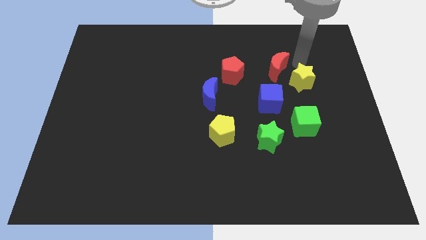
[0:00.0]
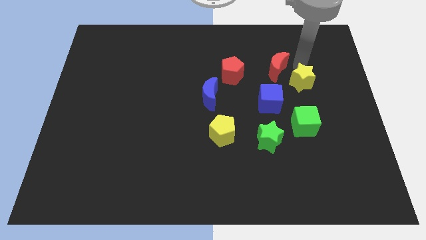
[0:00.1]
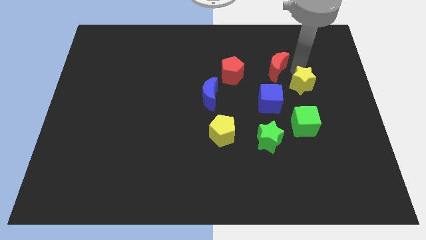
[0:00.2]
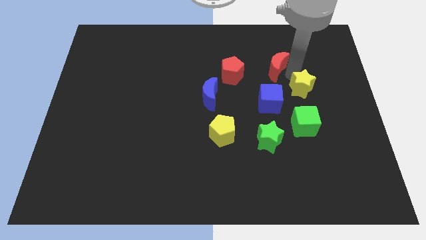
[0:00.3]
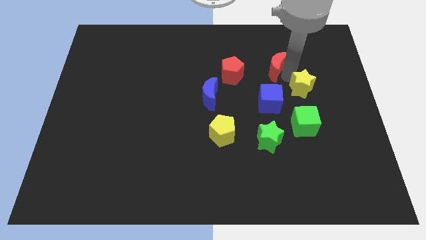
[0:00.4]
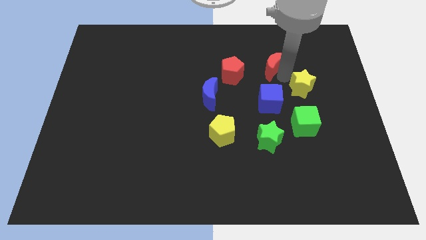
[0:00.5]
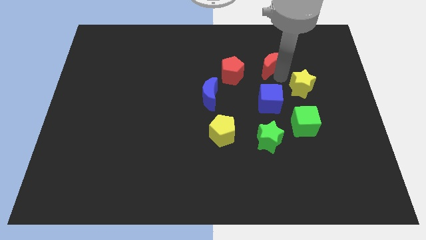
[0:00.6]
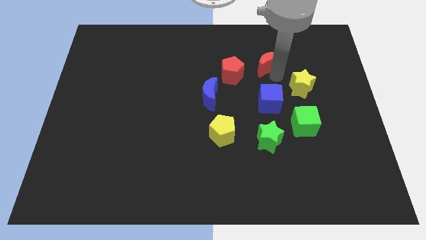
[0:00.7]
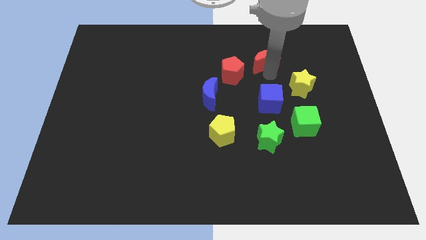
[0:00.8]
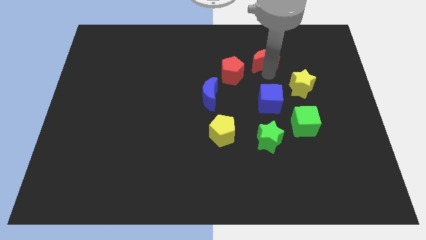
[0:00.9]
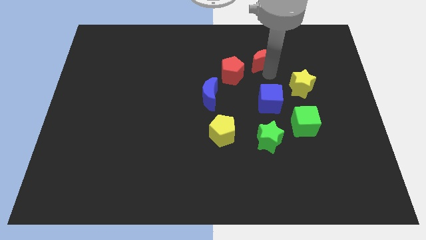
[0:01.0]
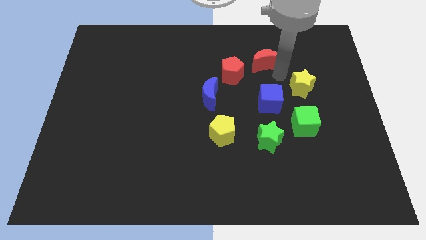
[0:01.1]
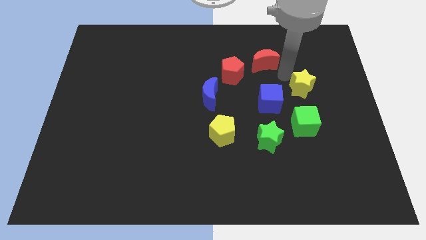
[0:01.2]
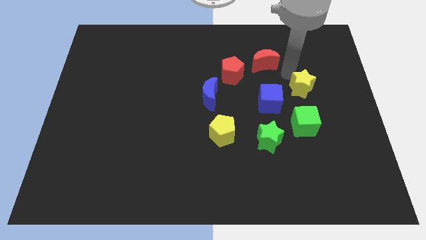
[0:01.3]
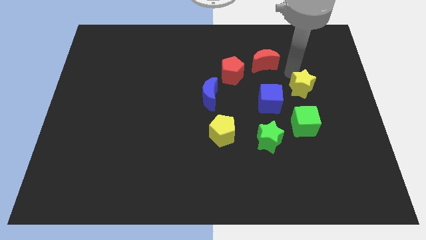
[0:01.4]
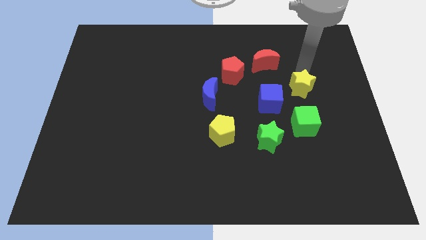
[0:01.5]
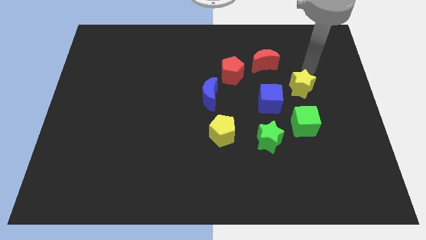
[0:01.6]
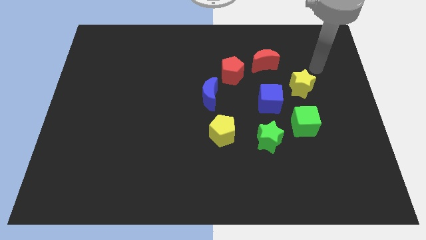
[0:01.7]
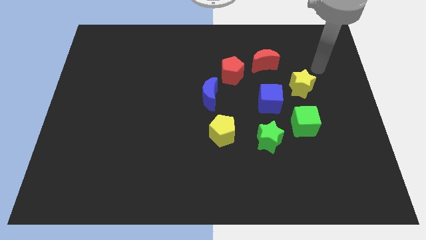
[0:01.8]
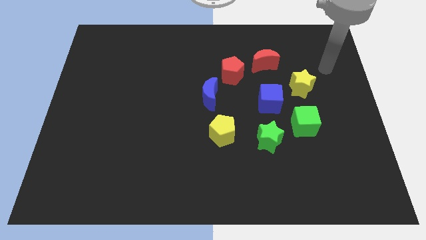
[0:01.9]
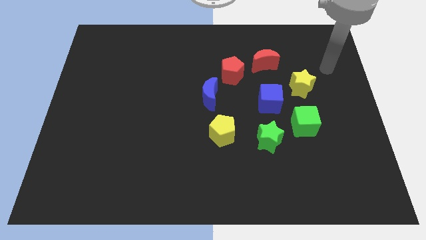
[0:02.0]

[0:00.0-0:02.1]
move red moon slightly left

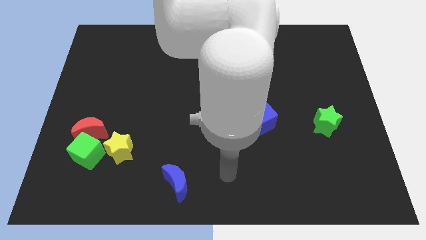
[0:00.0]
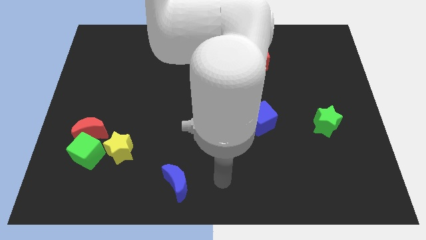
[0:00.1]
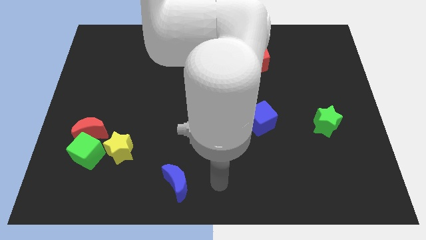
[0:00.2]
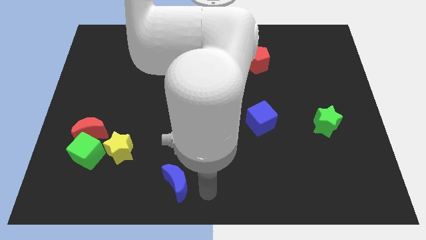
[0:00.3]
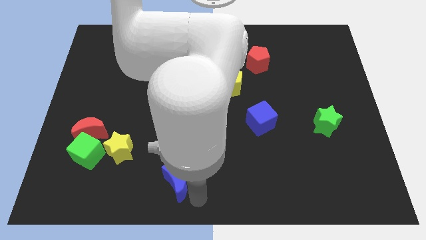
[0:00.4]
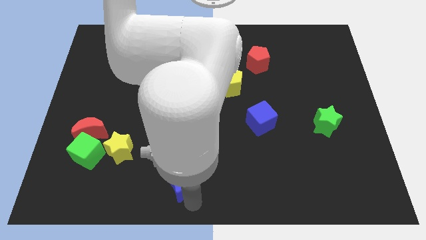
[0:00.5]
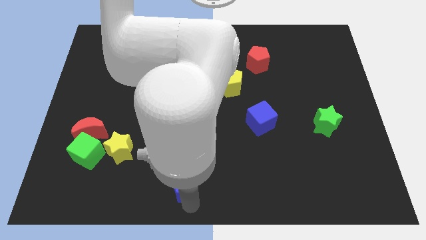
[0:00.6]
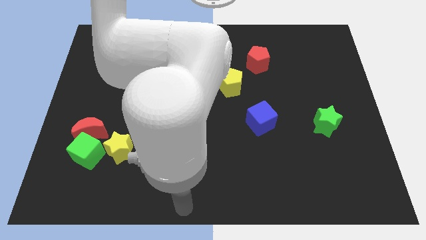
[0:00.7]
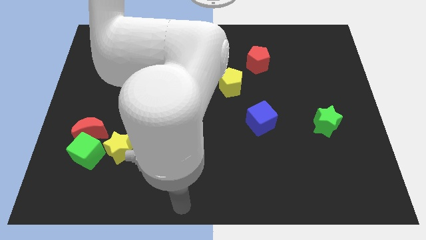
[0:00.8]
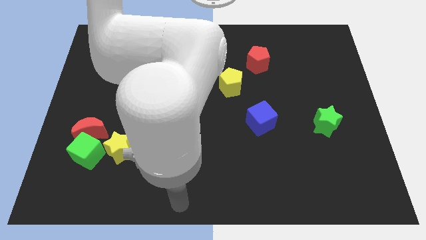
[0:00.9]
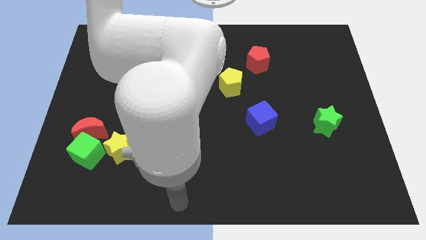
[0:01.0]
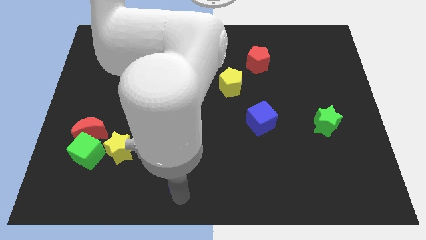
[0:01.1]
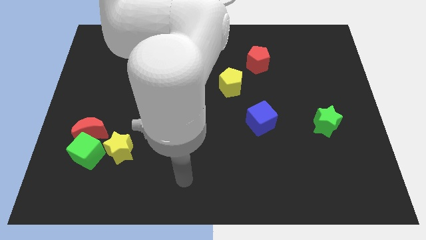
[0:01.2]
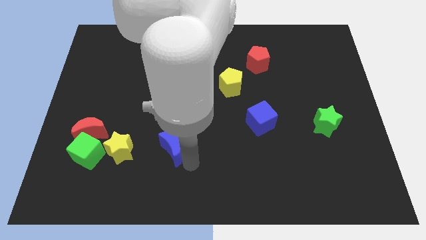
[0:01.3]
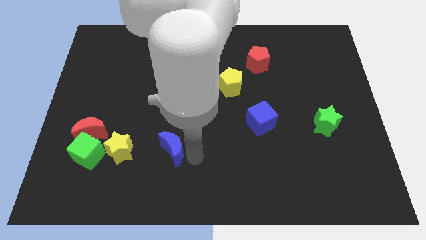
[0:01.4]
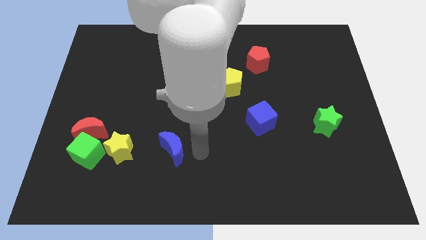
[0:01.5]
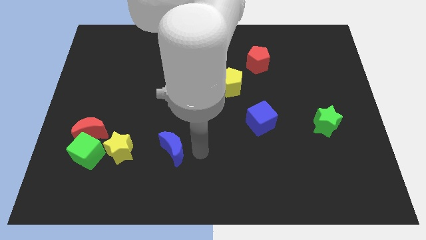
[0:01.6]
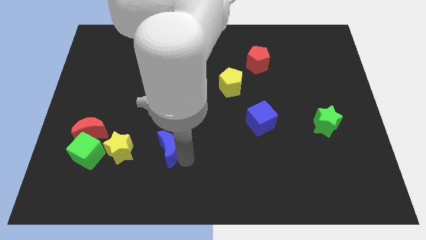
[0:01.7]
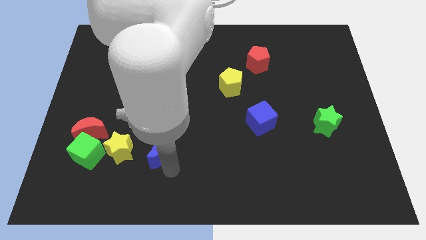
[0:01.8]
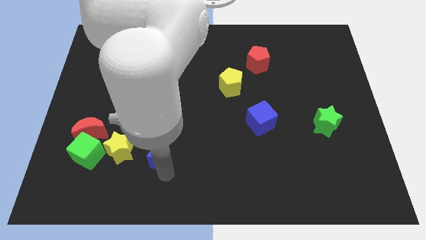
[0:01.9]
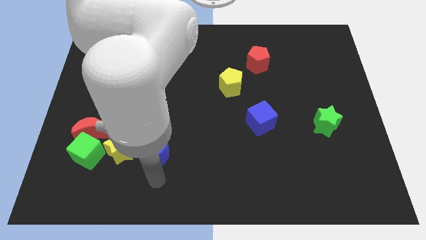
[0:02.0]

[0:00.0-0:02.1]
push the blue crescent to the right of the yellow star

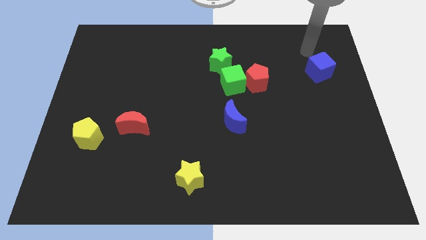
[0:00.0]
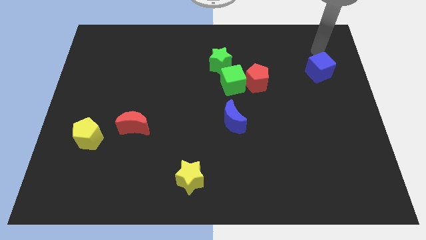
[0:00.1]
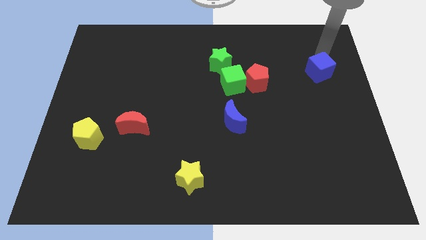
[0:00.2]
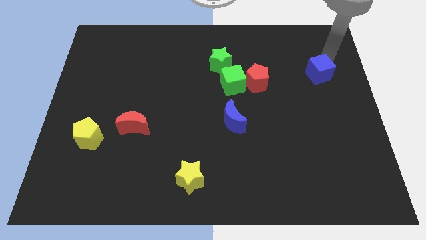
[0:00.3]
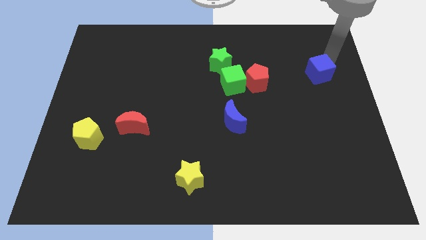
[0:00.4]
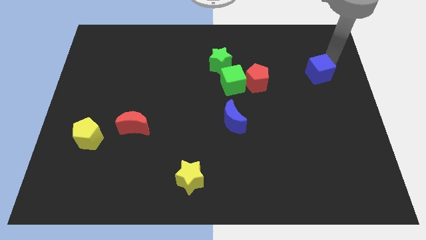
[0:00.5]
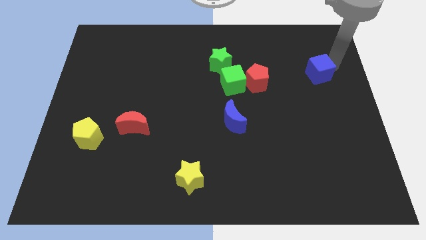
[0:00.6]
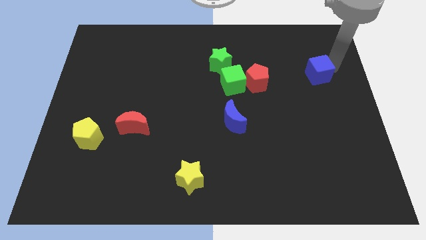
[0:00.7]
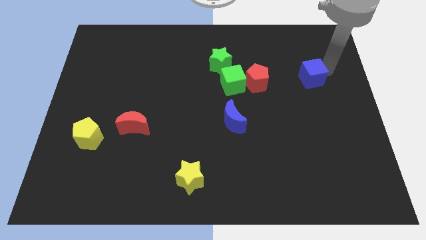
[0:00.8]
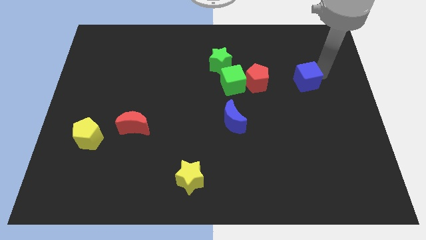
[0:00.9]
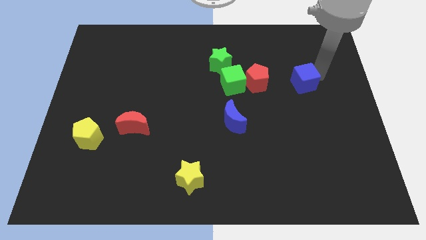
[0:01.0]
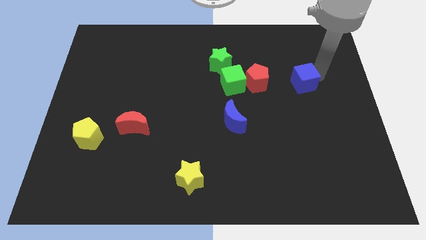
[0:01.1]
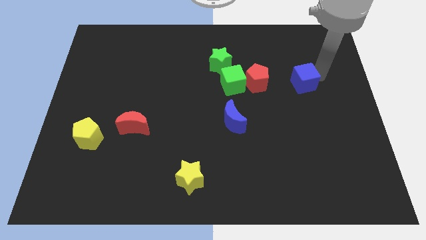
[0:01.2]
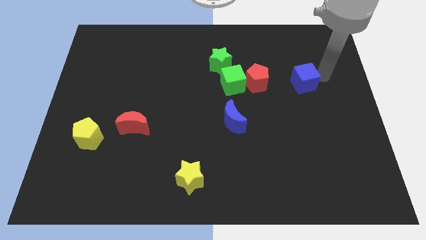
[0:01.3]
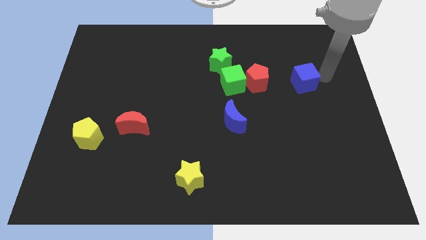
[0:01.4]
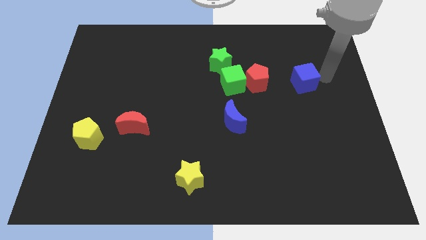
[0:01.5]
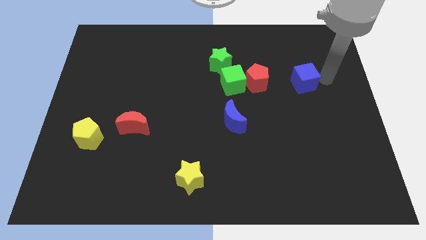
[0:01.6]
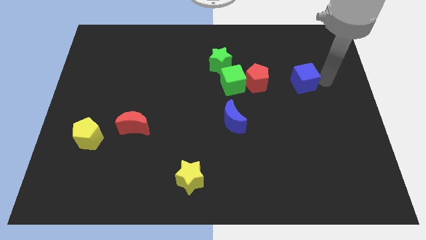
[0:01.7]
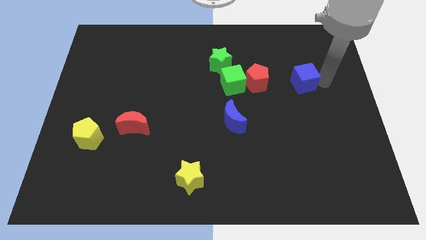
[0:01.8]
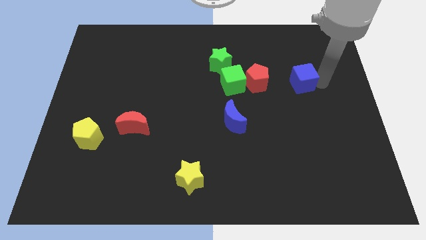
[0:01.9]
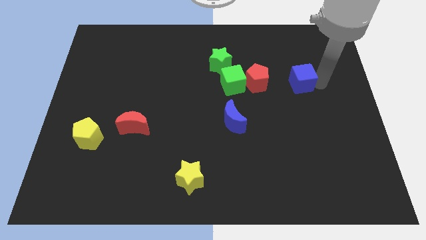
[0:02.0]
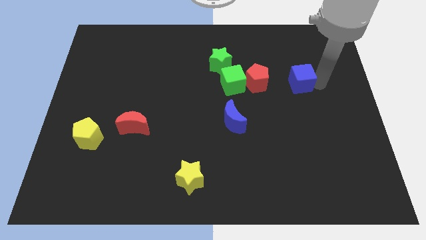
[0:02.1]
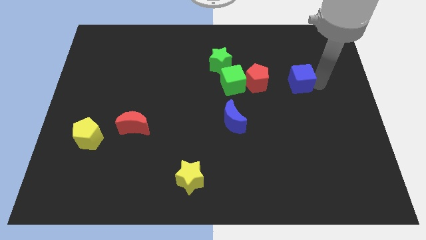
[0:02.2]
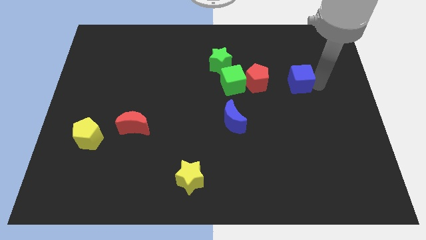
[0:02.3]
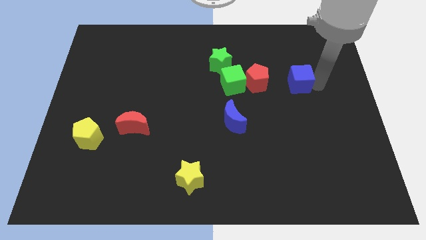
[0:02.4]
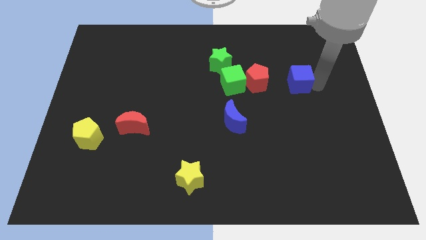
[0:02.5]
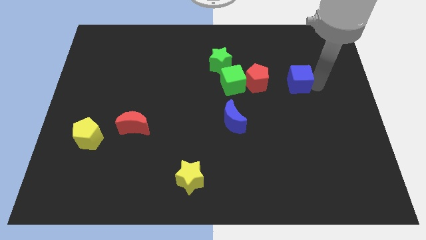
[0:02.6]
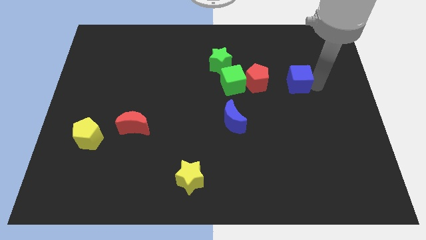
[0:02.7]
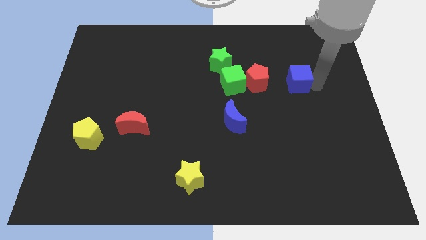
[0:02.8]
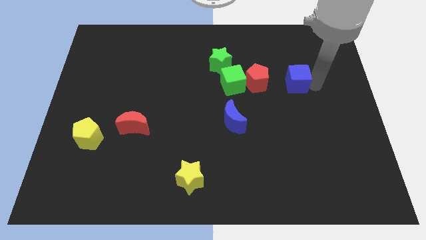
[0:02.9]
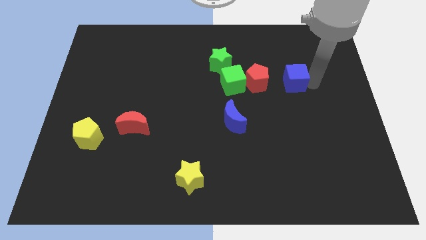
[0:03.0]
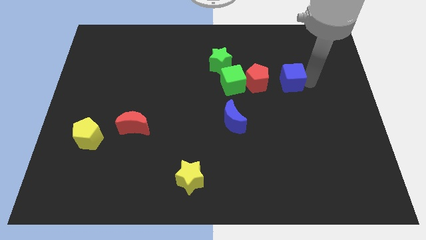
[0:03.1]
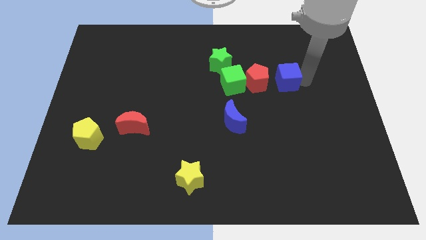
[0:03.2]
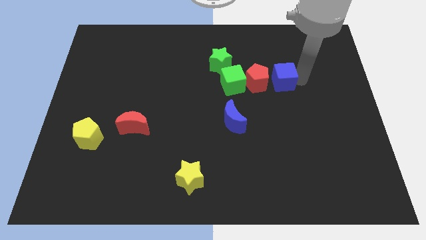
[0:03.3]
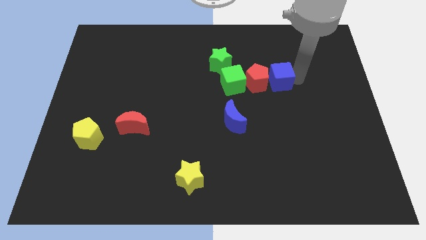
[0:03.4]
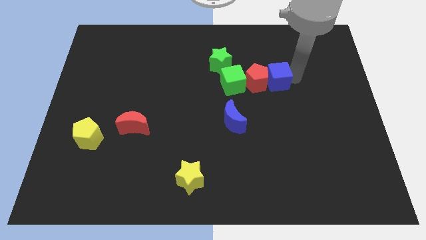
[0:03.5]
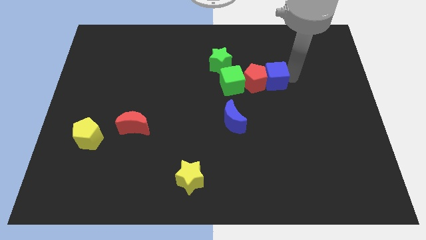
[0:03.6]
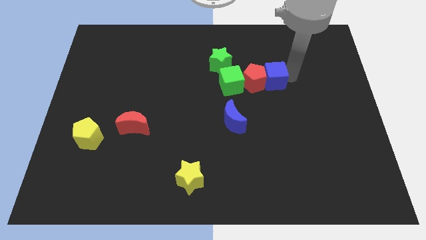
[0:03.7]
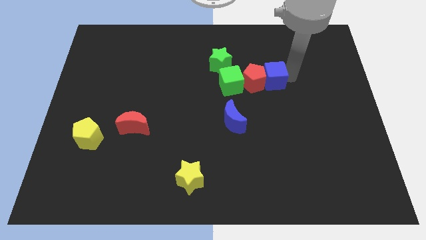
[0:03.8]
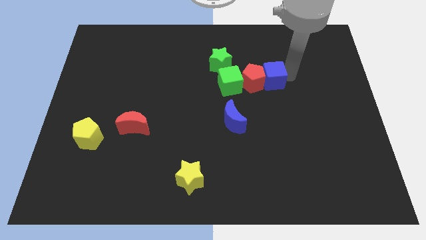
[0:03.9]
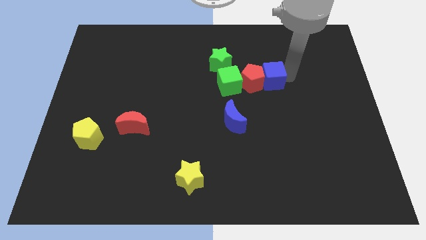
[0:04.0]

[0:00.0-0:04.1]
move blue cube into red pentagon

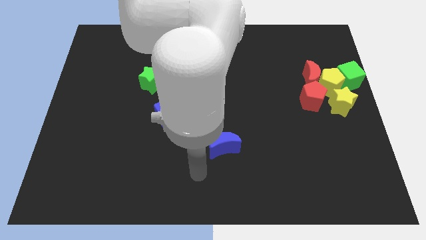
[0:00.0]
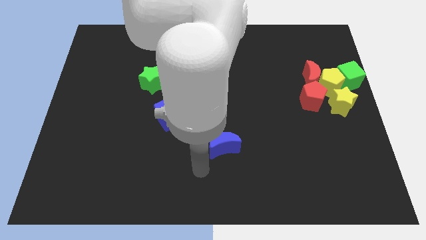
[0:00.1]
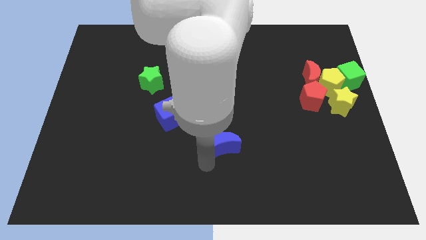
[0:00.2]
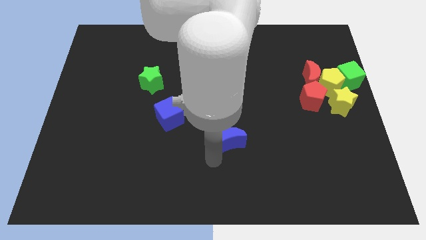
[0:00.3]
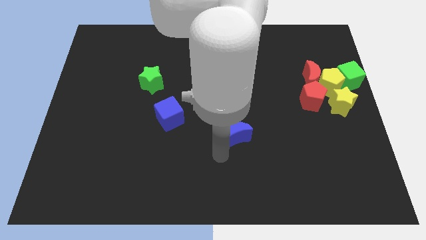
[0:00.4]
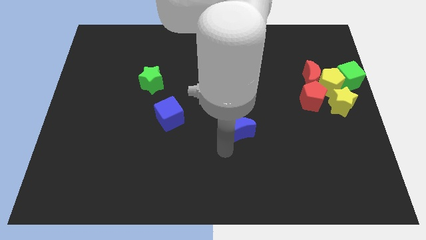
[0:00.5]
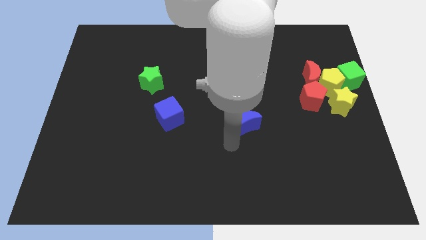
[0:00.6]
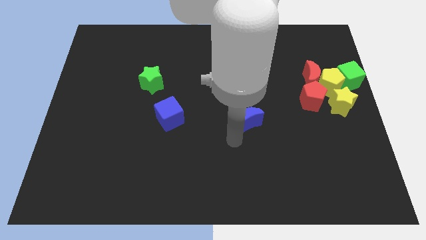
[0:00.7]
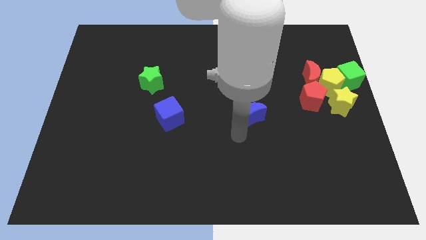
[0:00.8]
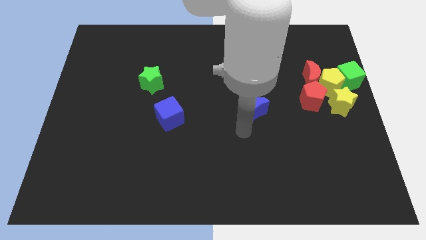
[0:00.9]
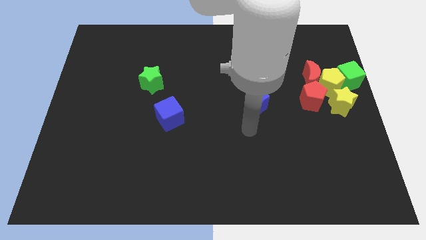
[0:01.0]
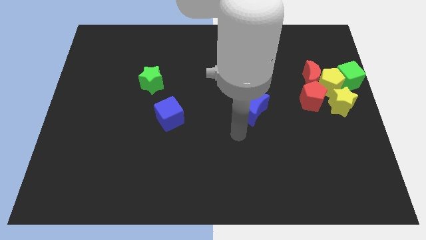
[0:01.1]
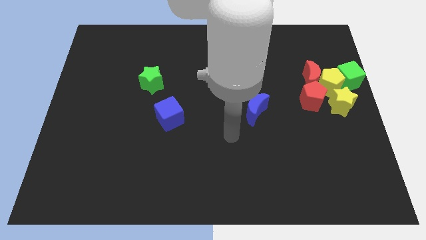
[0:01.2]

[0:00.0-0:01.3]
put the blue crescent parallel right to the blue cube
